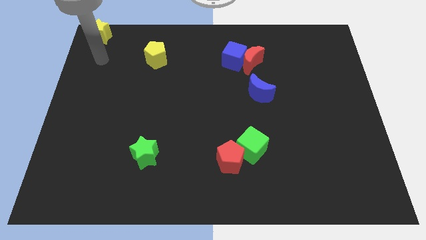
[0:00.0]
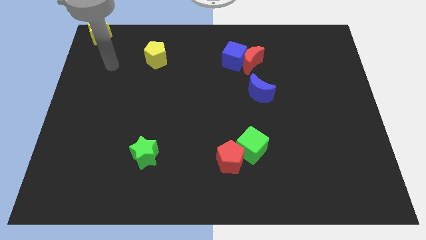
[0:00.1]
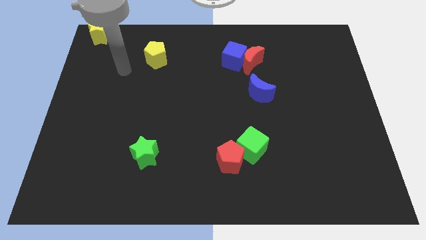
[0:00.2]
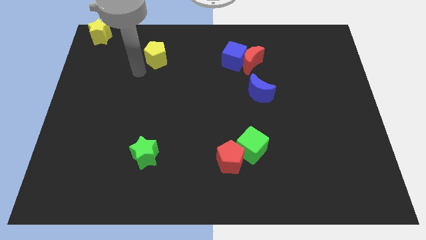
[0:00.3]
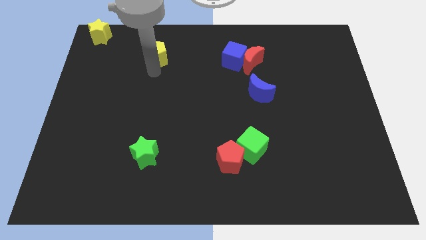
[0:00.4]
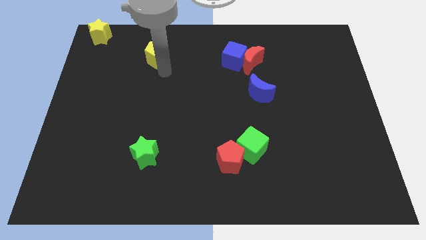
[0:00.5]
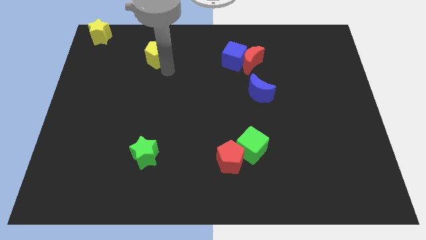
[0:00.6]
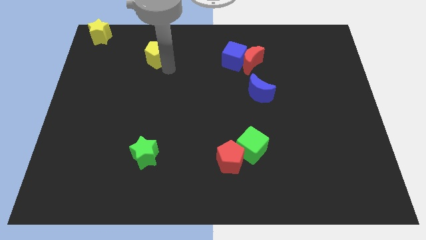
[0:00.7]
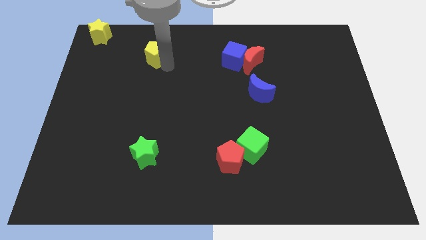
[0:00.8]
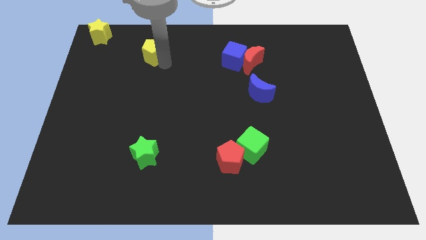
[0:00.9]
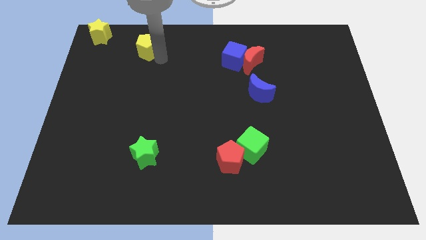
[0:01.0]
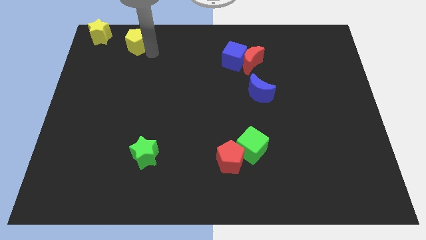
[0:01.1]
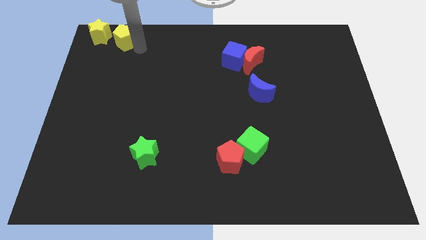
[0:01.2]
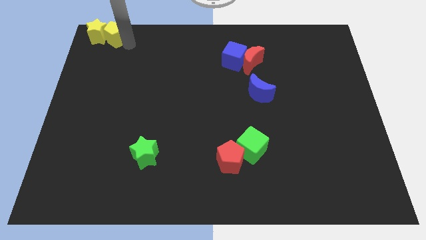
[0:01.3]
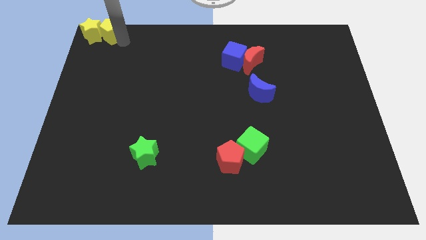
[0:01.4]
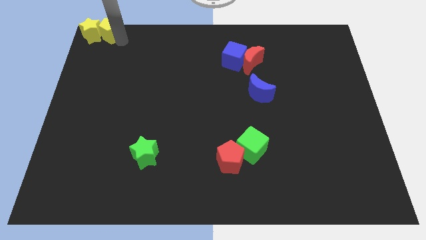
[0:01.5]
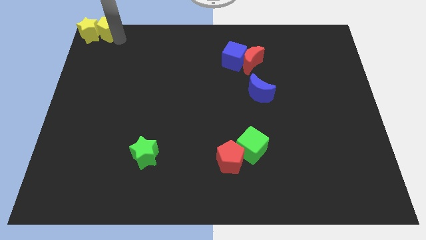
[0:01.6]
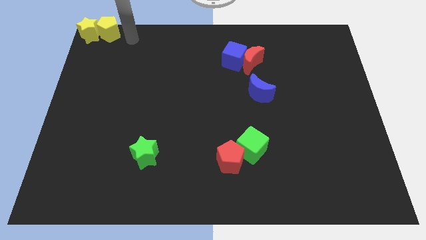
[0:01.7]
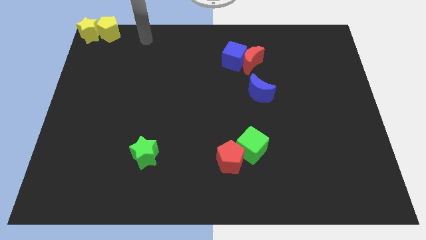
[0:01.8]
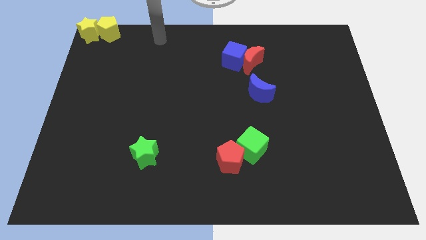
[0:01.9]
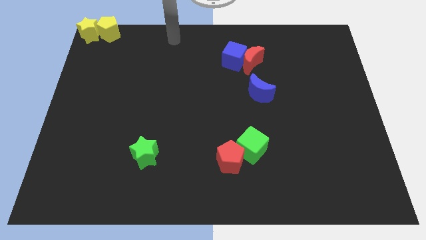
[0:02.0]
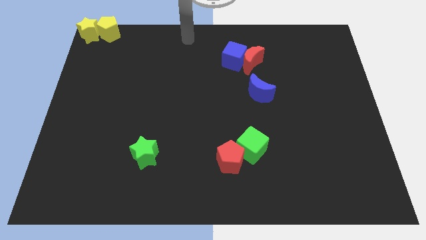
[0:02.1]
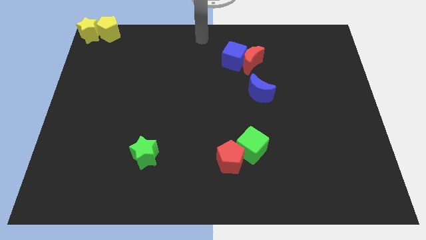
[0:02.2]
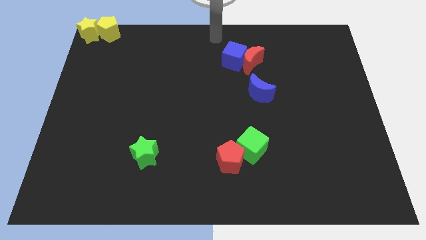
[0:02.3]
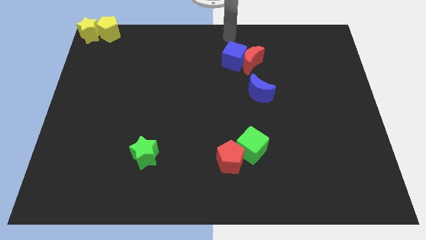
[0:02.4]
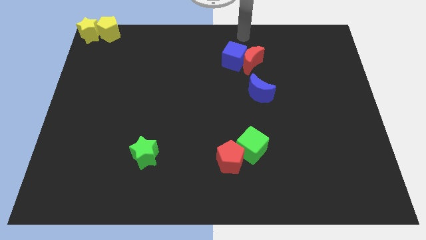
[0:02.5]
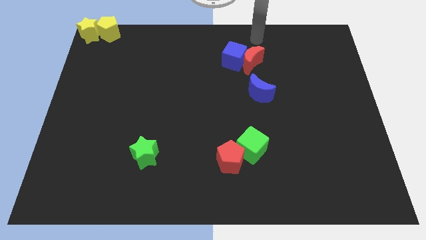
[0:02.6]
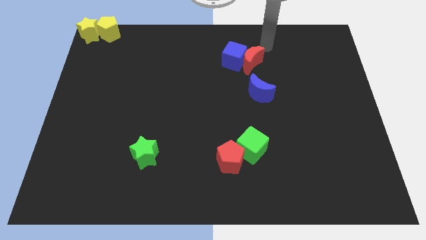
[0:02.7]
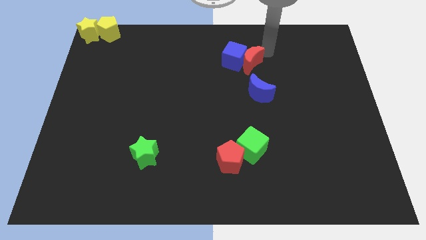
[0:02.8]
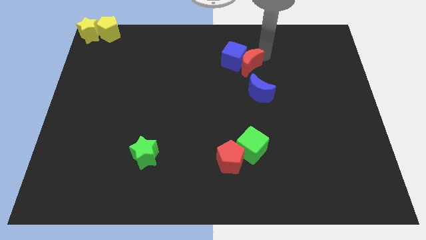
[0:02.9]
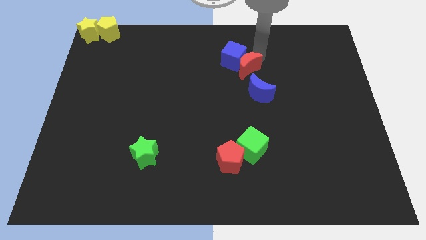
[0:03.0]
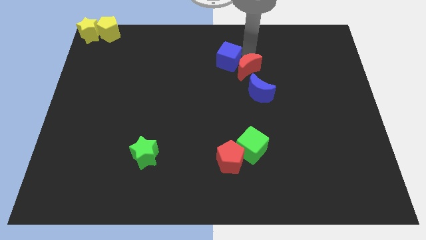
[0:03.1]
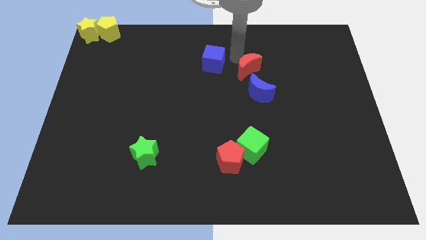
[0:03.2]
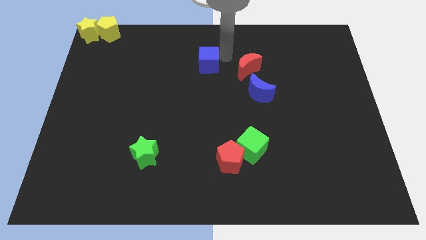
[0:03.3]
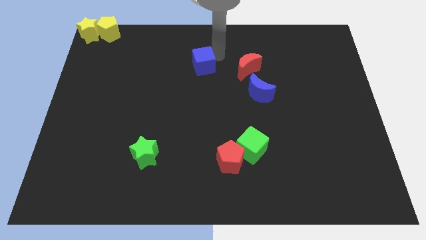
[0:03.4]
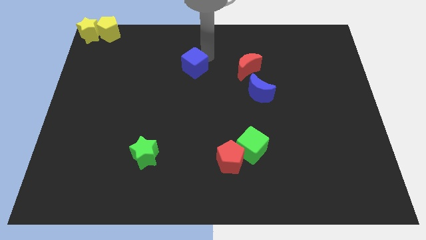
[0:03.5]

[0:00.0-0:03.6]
separate the blue cube and red moon

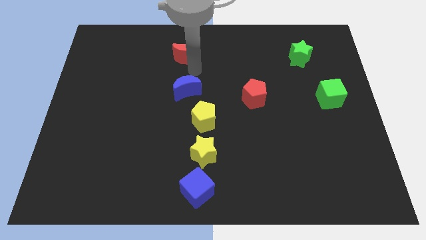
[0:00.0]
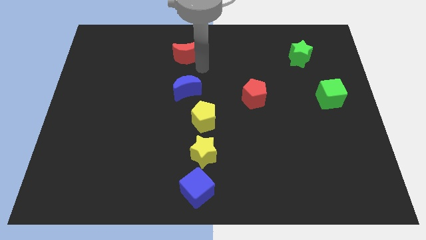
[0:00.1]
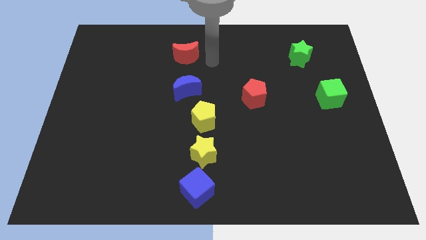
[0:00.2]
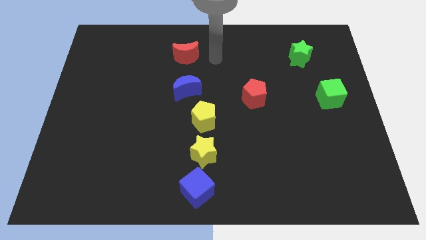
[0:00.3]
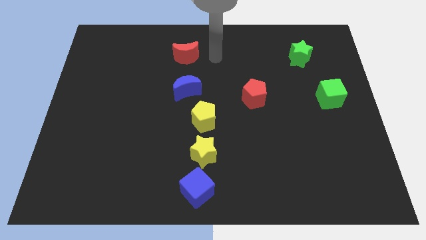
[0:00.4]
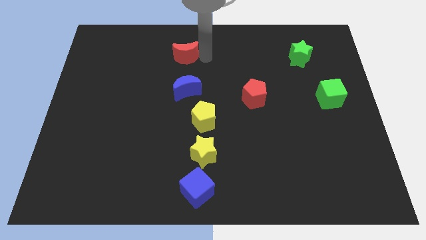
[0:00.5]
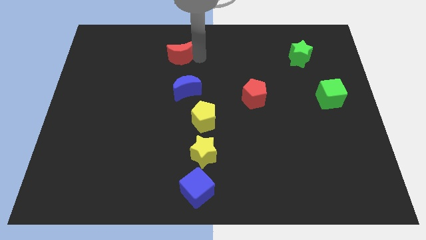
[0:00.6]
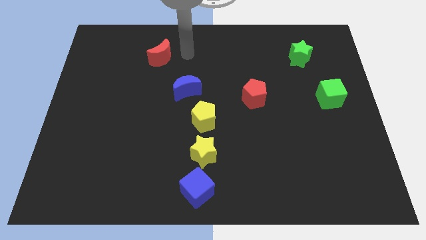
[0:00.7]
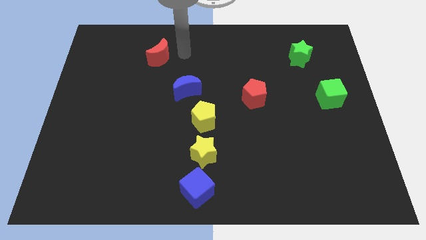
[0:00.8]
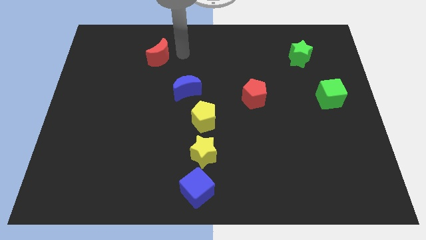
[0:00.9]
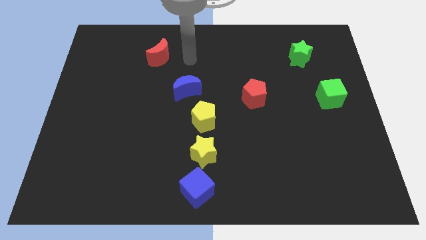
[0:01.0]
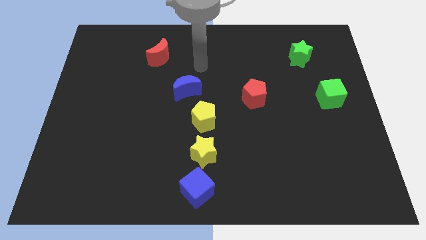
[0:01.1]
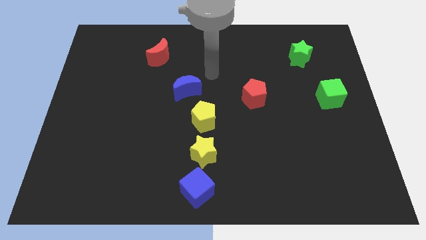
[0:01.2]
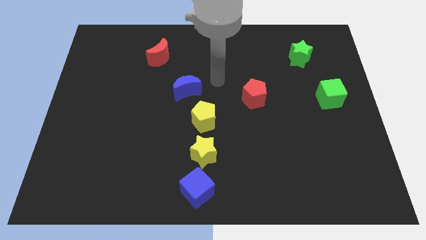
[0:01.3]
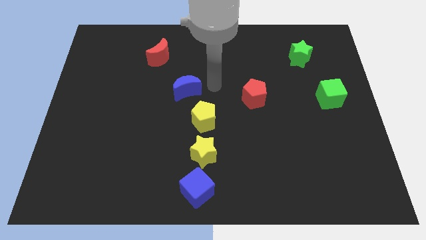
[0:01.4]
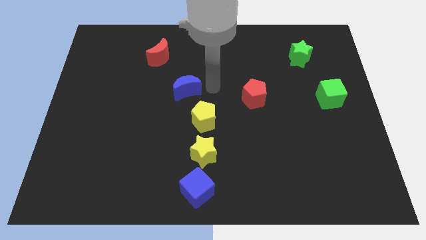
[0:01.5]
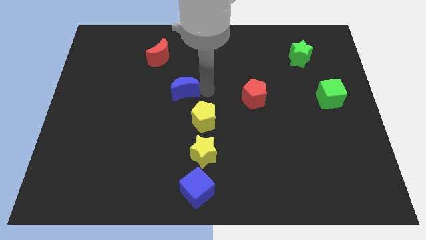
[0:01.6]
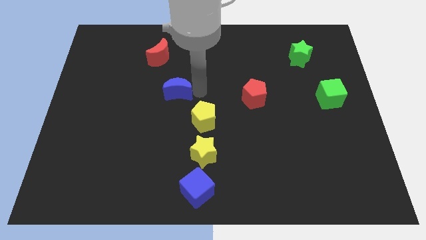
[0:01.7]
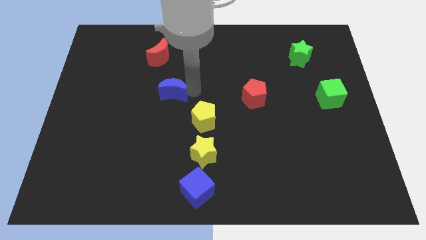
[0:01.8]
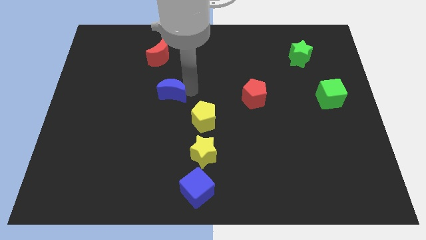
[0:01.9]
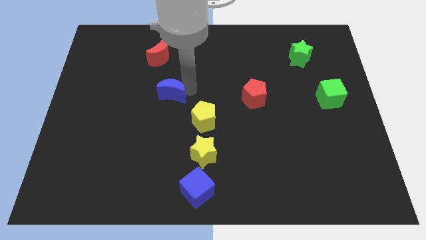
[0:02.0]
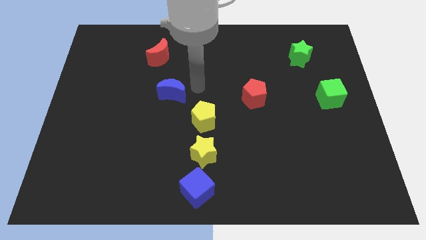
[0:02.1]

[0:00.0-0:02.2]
place blue moon slightly to the left side of the board

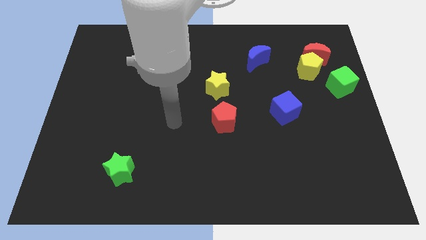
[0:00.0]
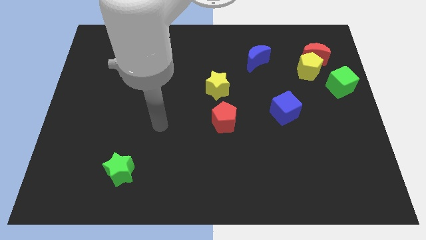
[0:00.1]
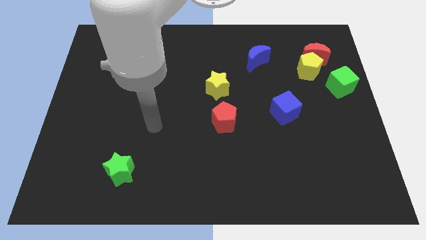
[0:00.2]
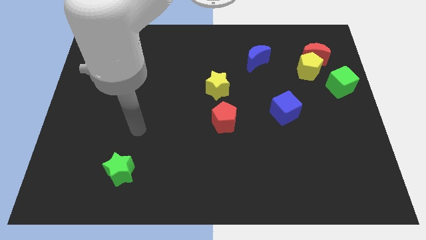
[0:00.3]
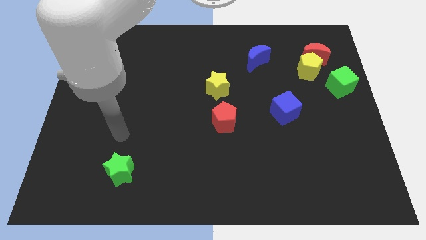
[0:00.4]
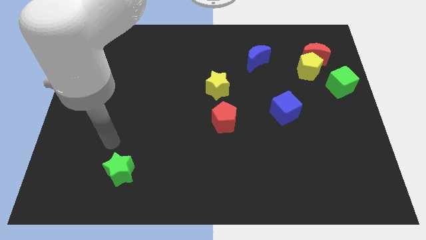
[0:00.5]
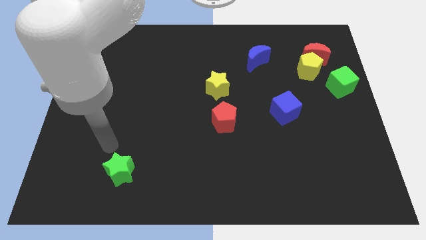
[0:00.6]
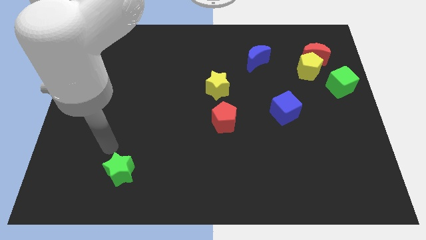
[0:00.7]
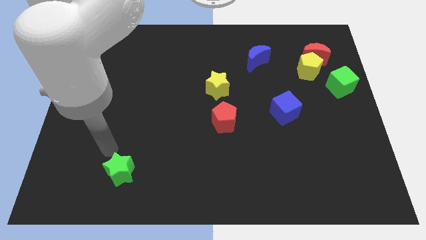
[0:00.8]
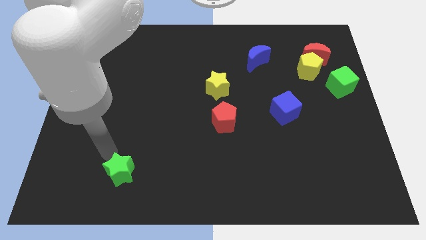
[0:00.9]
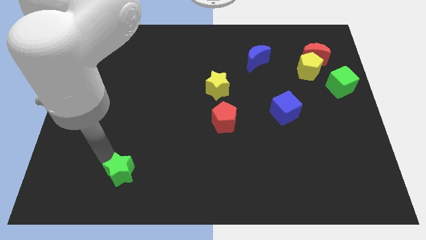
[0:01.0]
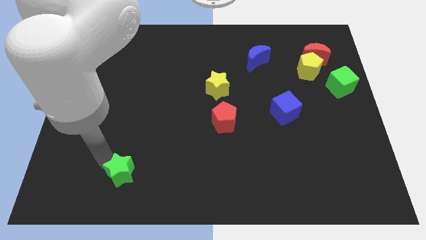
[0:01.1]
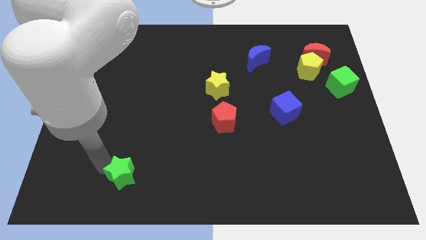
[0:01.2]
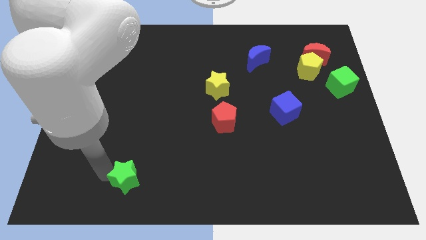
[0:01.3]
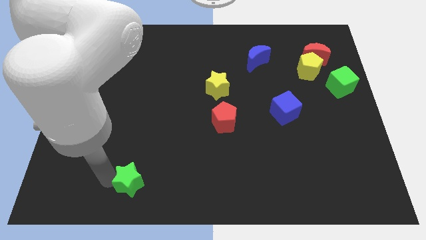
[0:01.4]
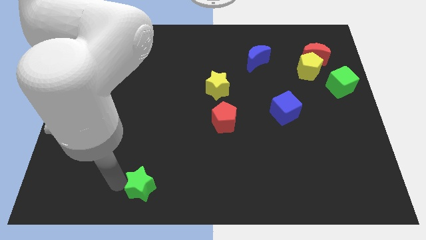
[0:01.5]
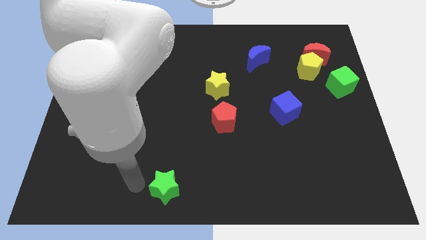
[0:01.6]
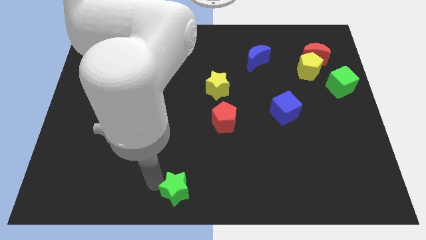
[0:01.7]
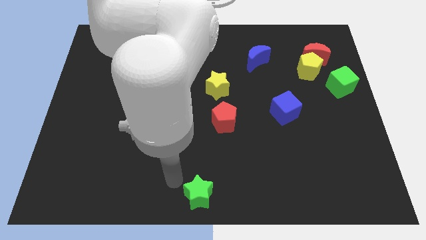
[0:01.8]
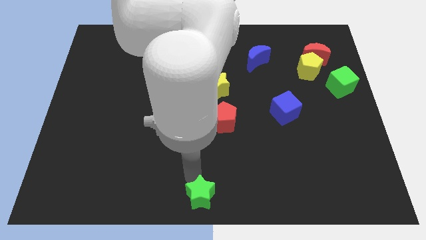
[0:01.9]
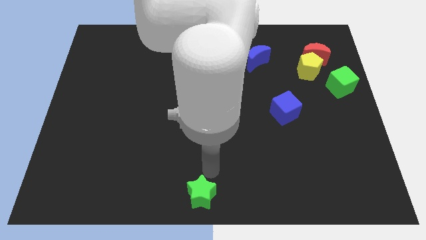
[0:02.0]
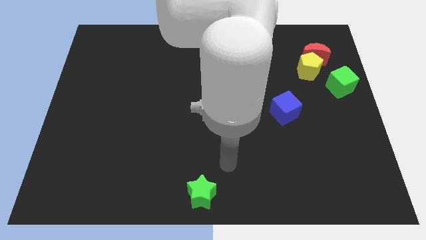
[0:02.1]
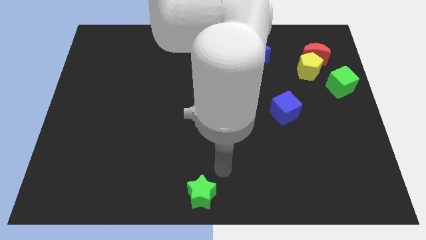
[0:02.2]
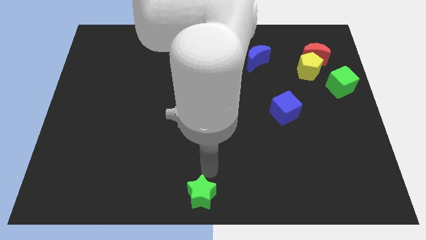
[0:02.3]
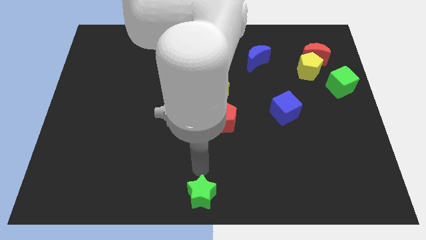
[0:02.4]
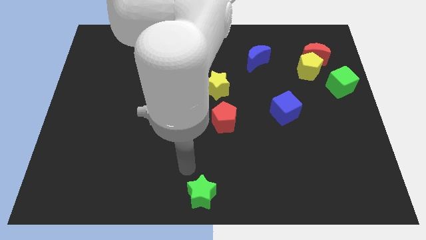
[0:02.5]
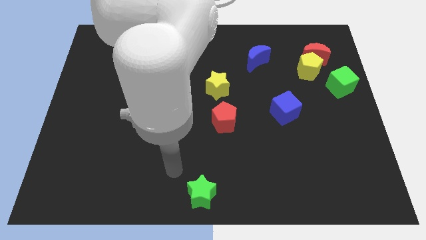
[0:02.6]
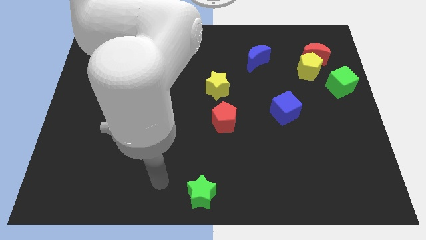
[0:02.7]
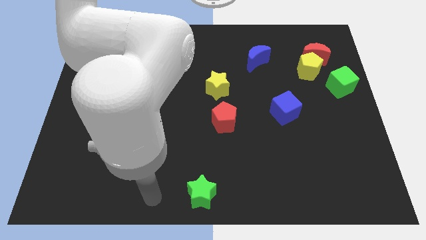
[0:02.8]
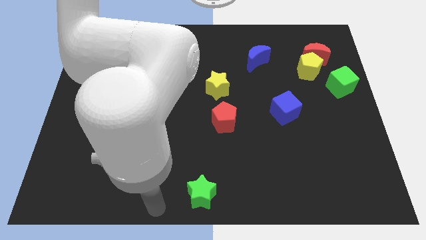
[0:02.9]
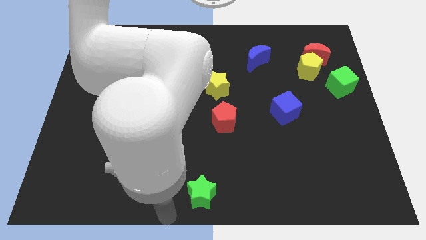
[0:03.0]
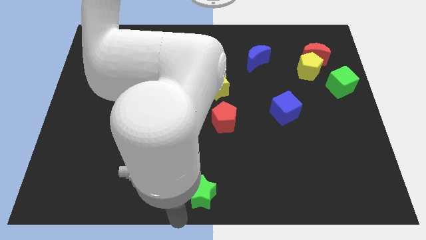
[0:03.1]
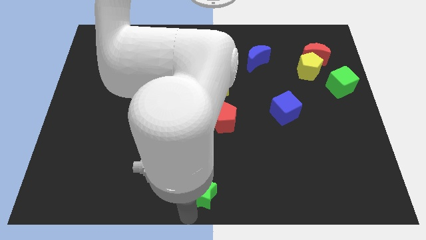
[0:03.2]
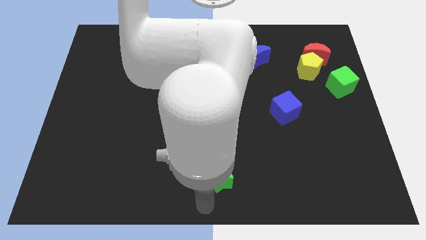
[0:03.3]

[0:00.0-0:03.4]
push the green star to the bottom center

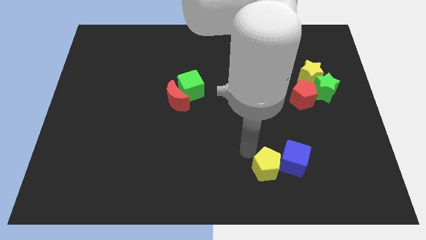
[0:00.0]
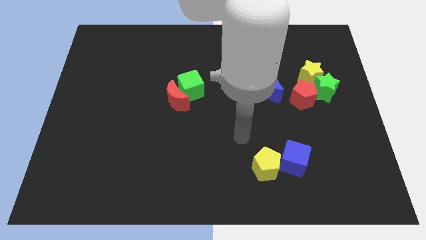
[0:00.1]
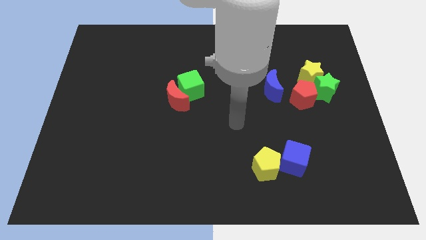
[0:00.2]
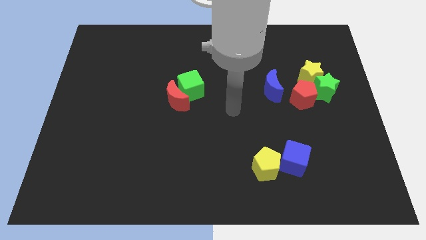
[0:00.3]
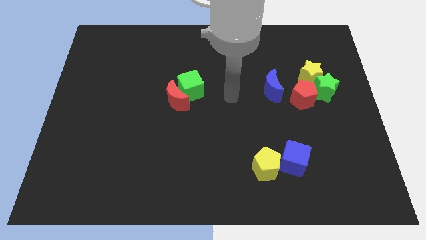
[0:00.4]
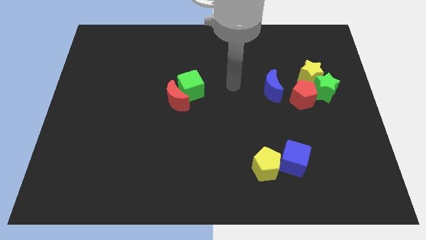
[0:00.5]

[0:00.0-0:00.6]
move the arm up
